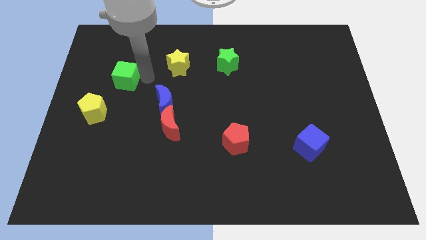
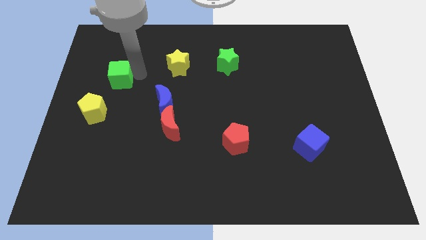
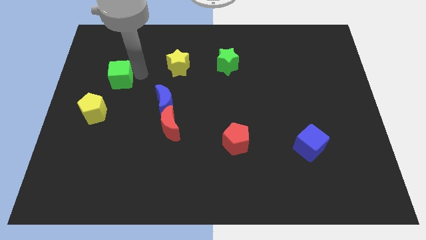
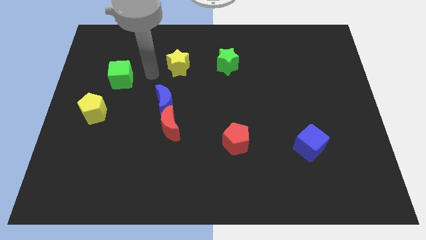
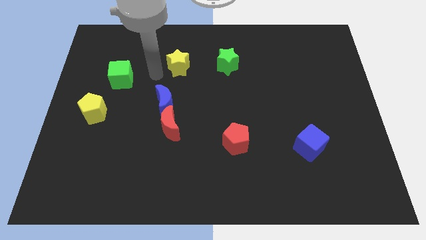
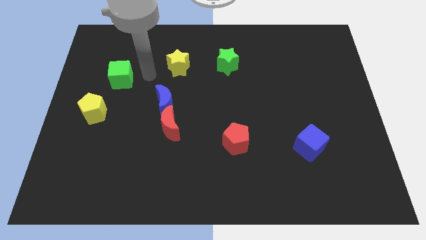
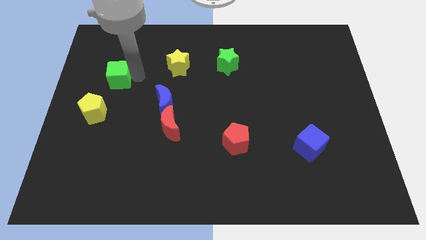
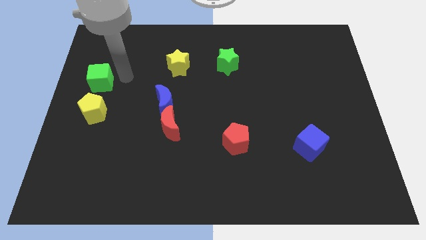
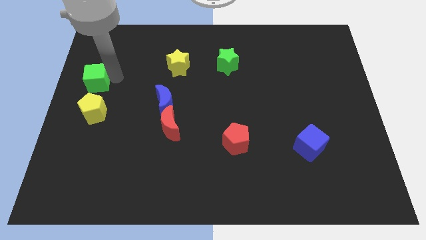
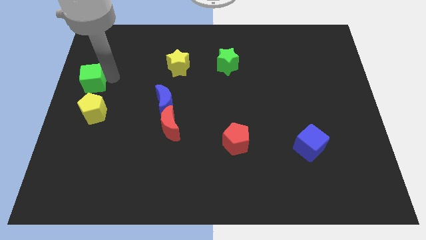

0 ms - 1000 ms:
push blue cube above yellow pentagon

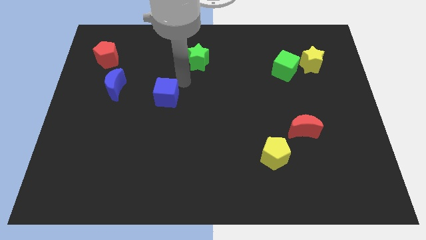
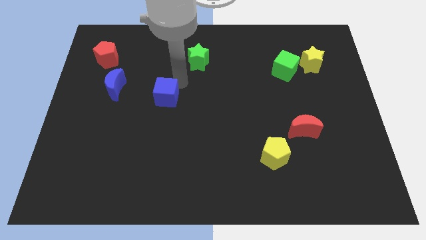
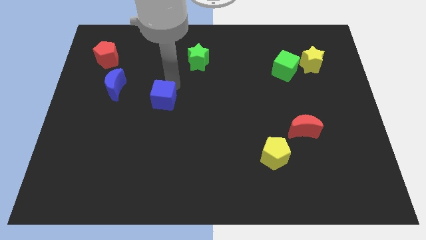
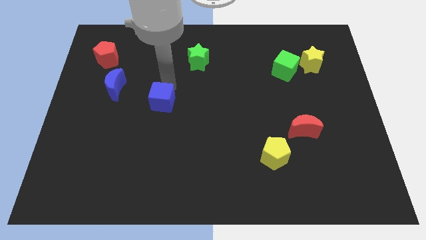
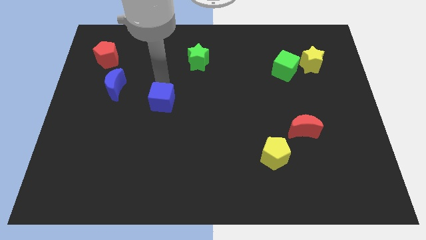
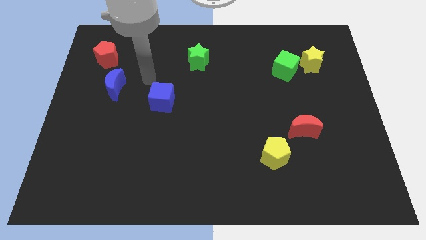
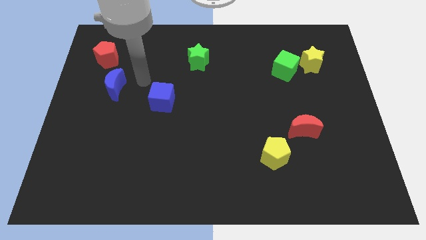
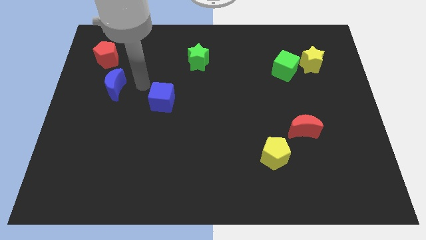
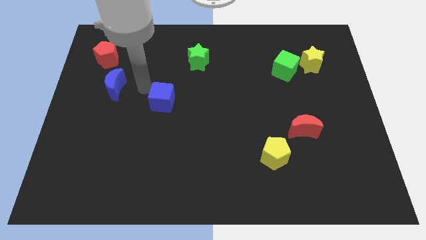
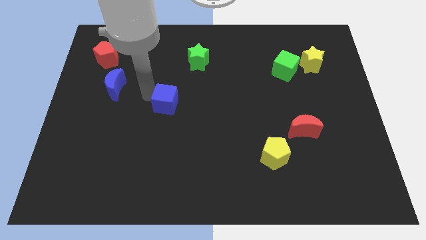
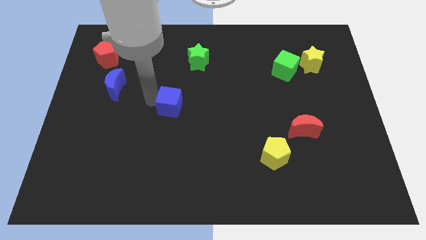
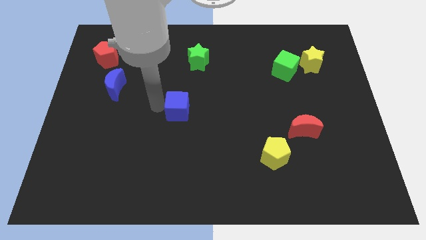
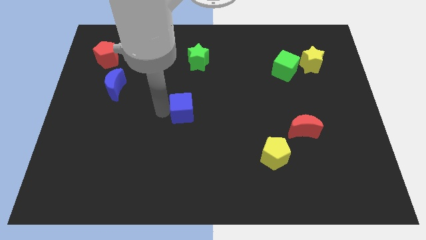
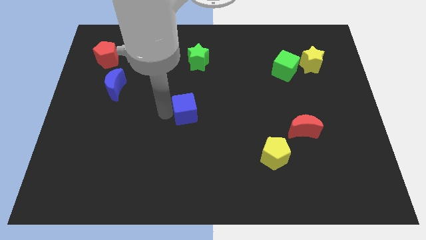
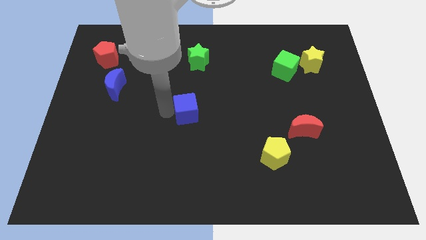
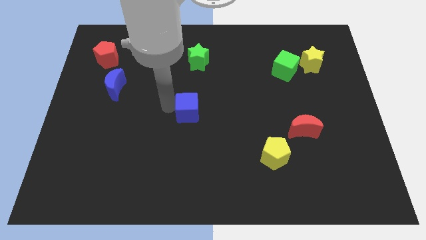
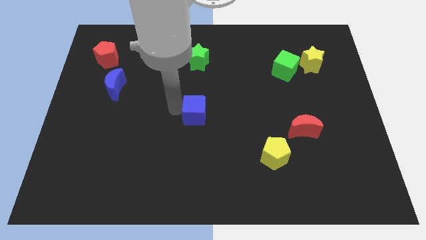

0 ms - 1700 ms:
move the blue cube to the bottom of the green star

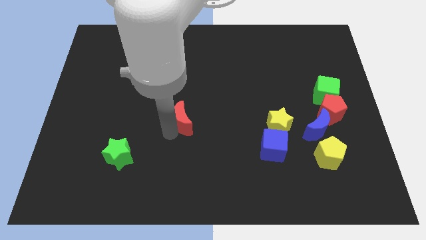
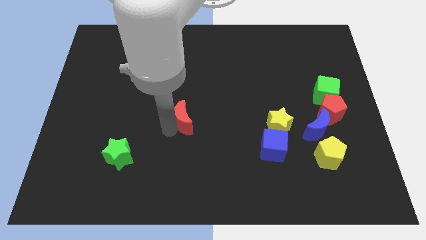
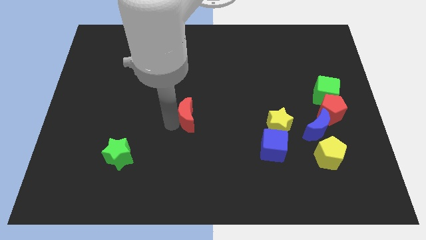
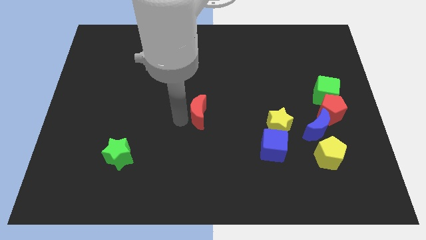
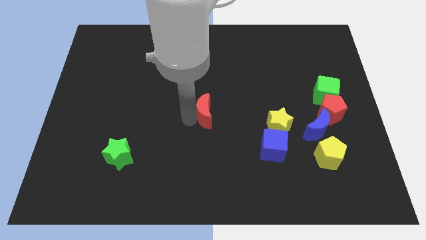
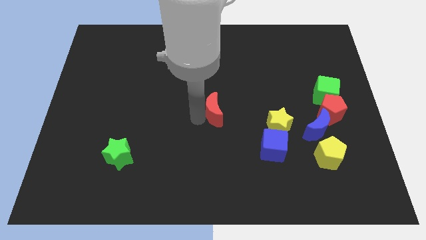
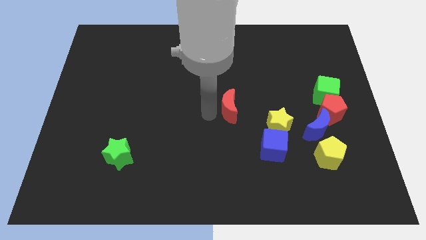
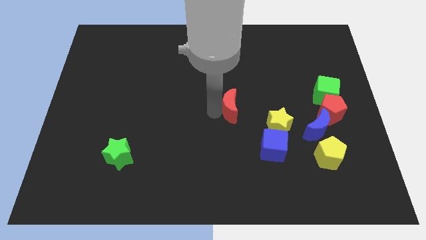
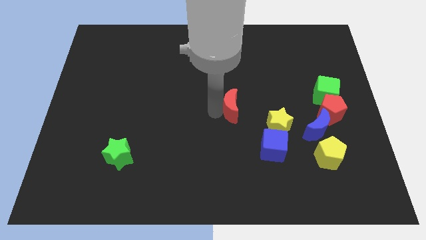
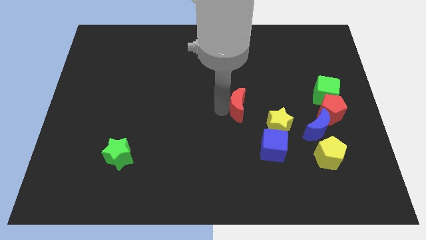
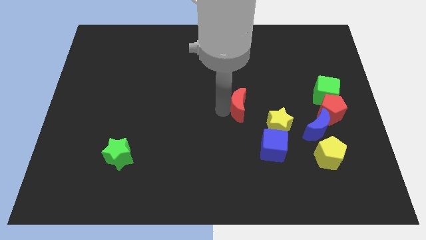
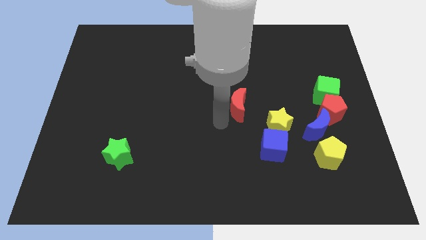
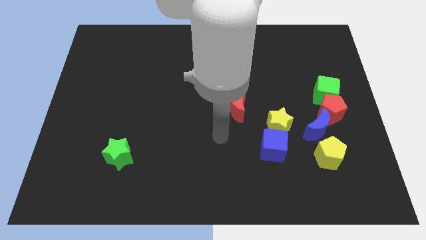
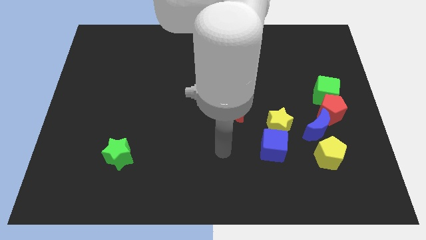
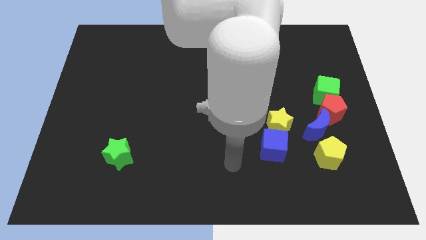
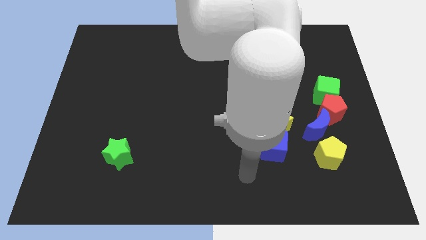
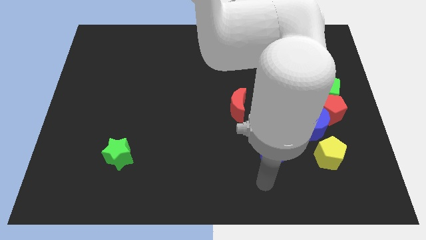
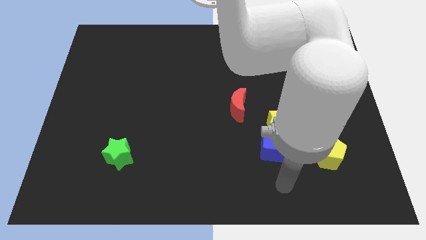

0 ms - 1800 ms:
point your arm below the blue cube

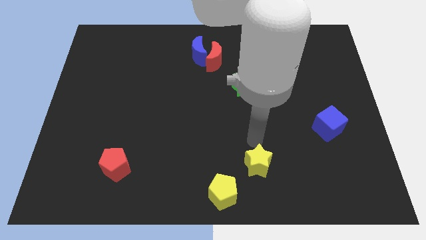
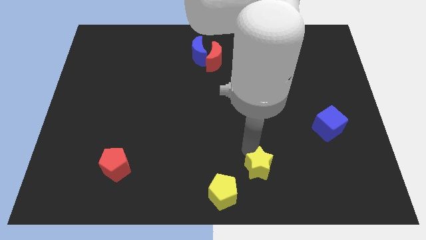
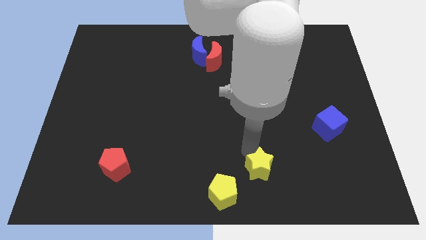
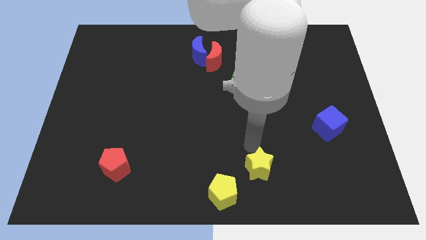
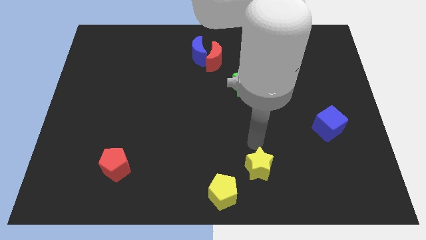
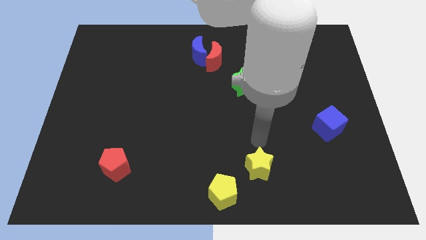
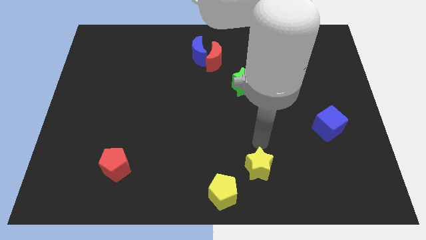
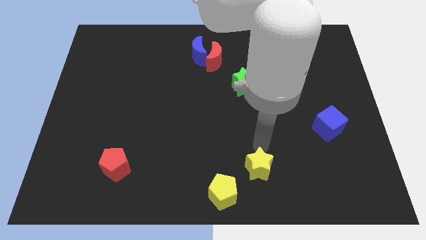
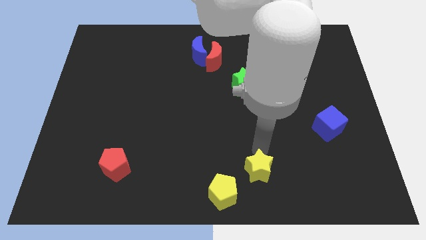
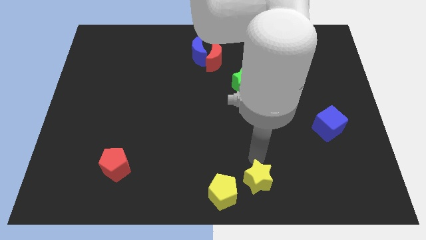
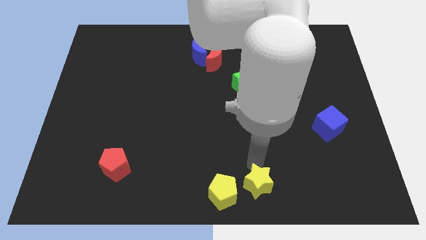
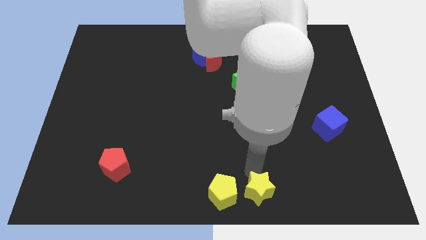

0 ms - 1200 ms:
place yellow star to the right side of the yellow pentagon

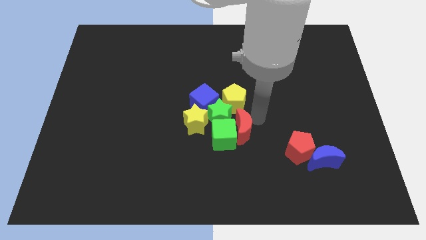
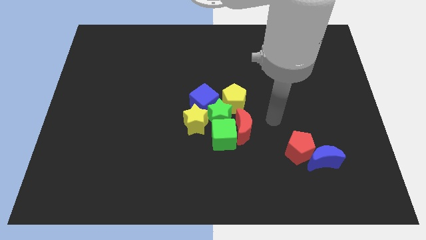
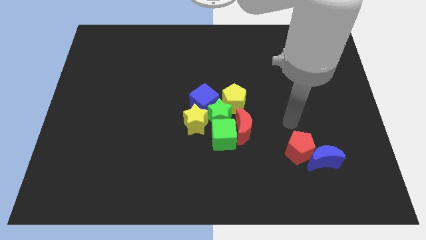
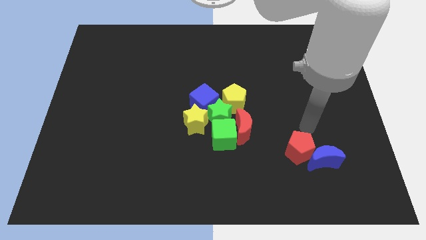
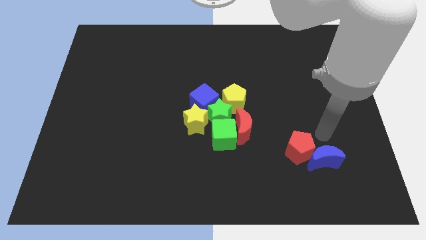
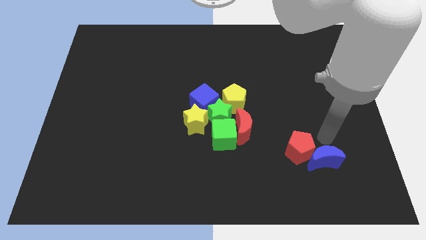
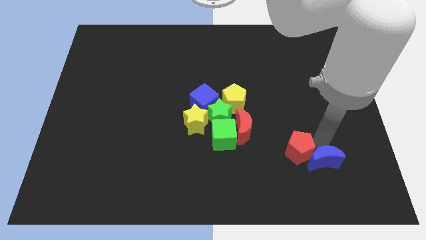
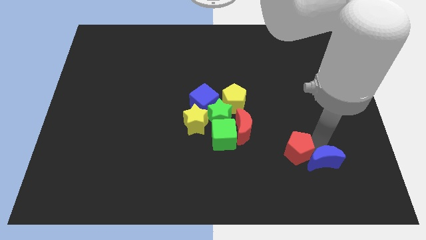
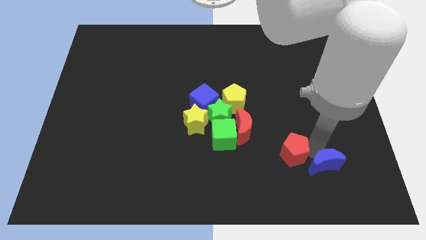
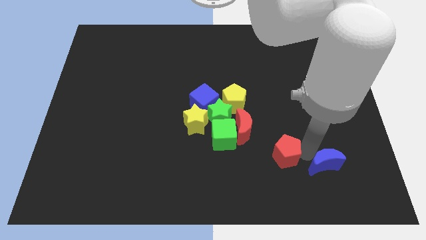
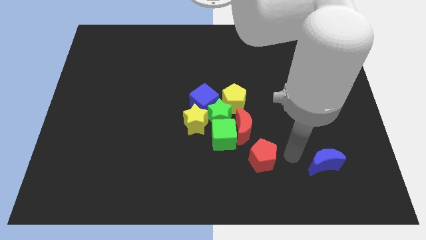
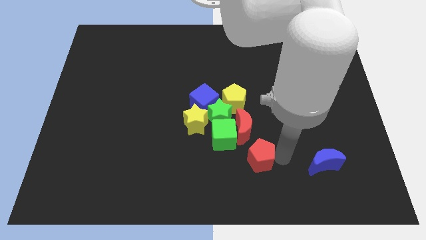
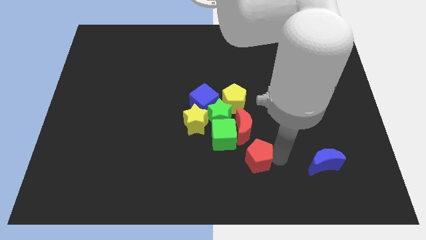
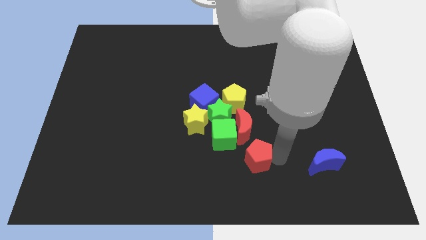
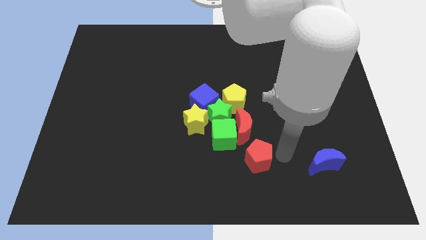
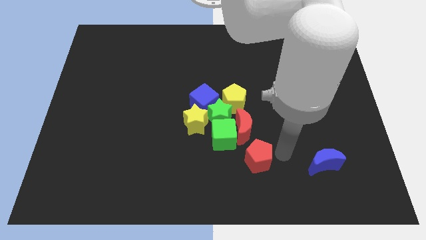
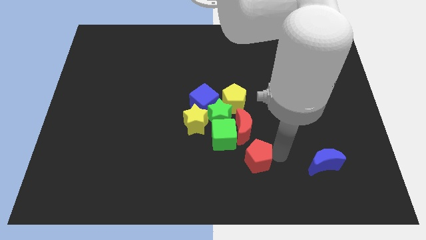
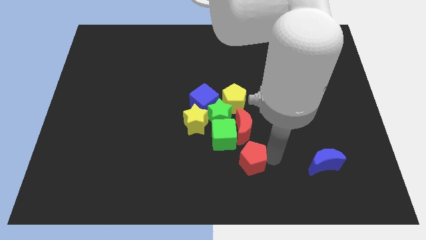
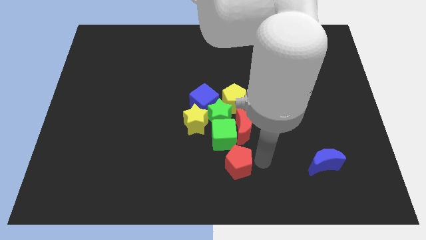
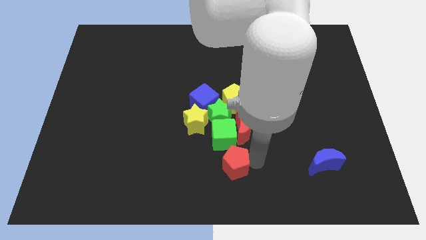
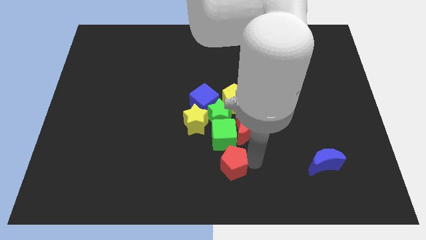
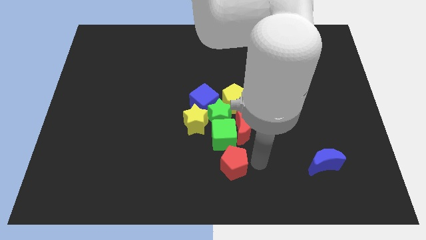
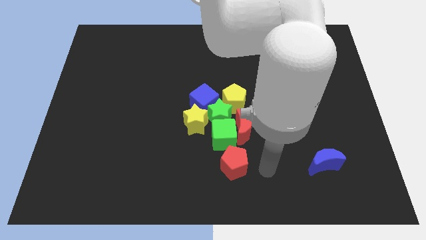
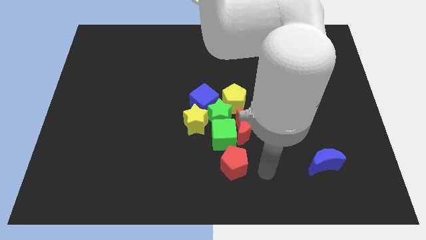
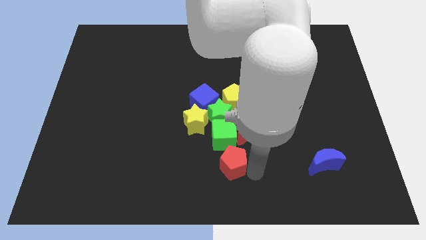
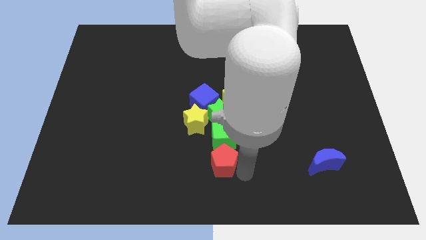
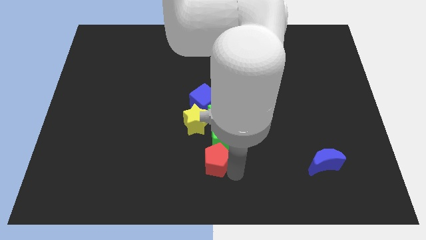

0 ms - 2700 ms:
put the red pentagon underneath the green cube

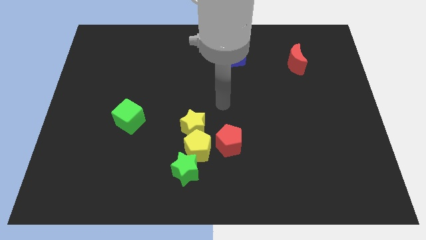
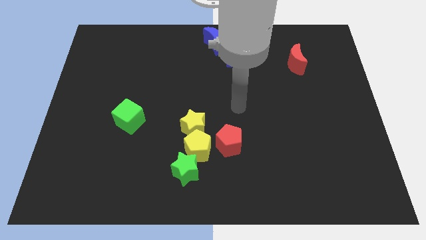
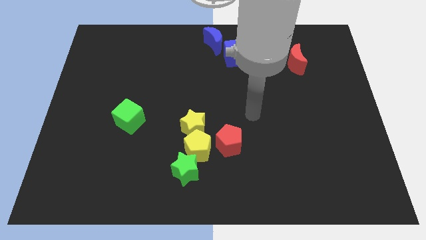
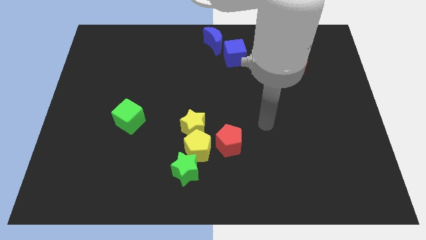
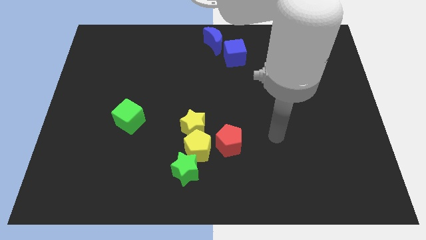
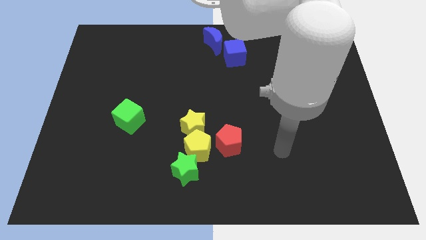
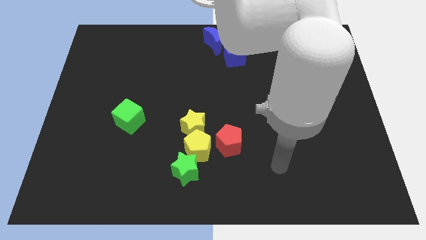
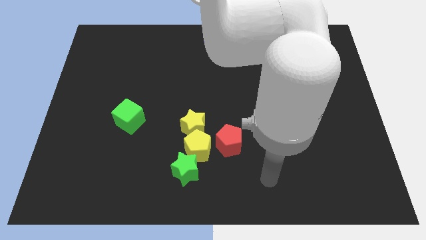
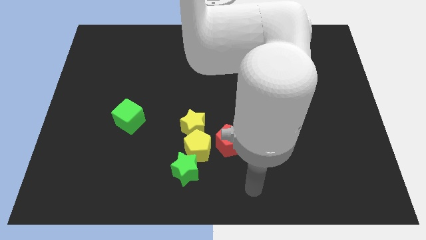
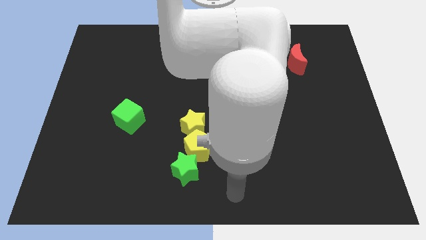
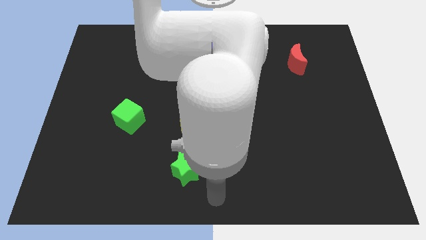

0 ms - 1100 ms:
point the arm at the bottom center of the board
